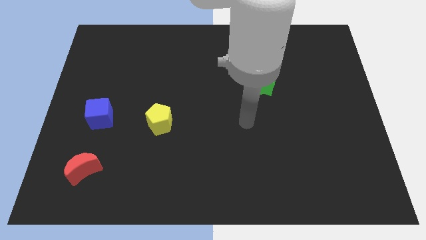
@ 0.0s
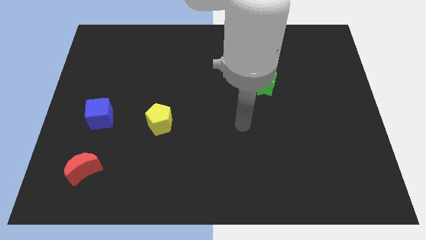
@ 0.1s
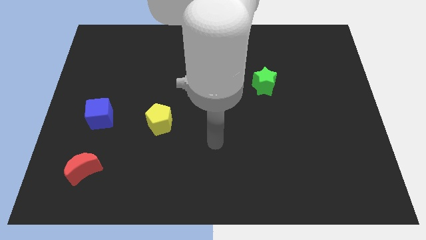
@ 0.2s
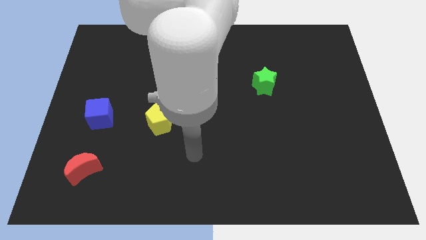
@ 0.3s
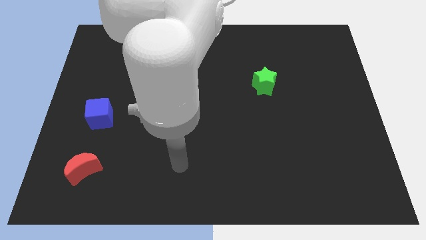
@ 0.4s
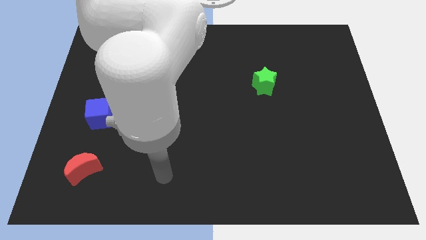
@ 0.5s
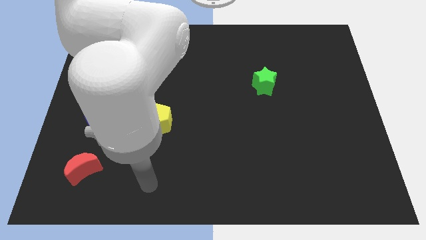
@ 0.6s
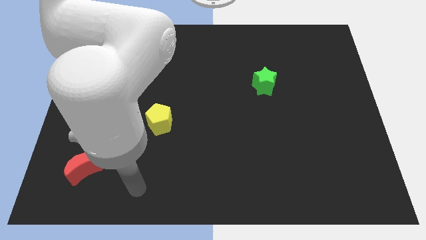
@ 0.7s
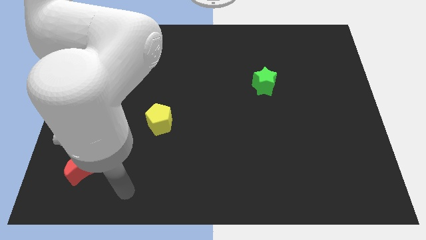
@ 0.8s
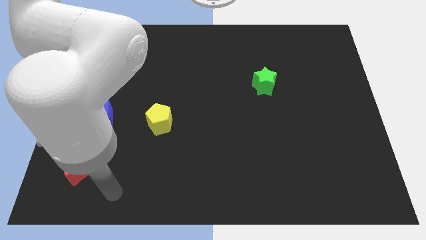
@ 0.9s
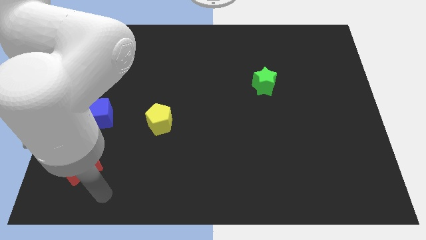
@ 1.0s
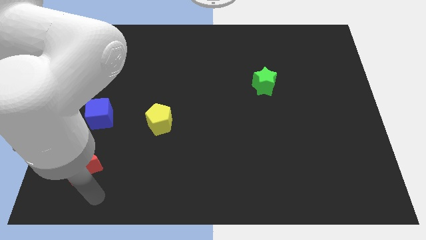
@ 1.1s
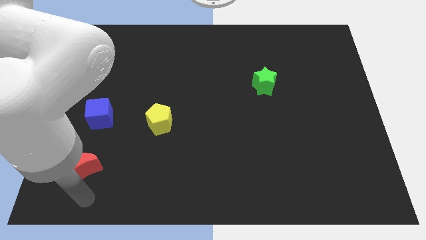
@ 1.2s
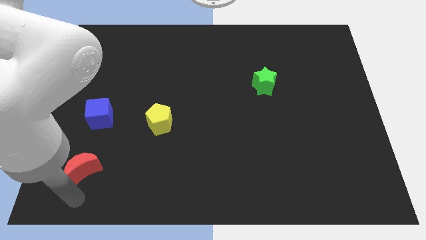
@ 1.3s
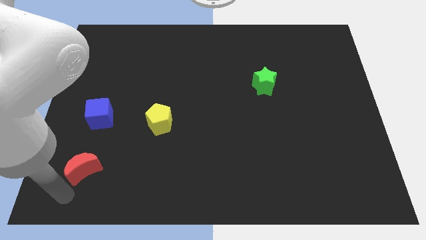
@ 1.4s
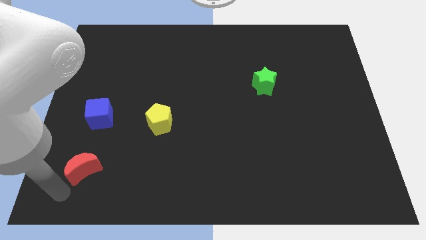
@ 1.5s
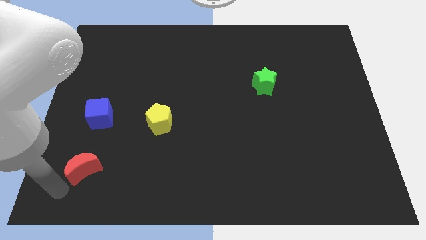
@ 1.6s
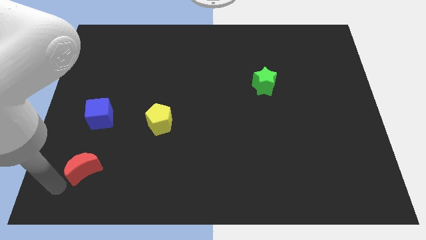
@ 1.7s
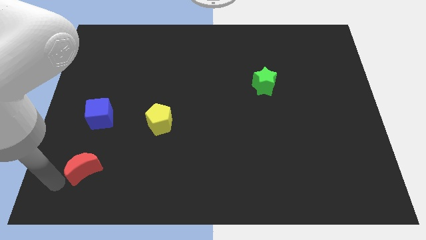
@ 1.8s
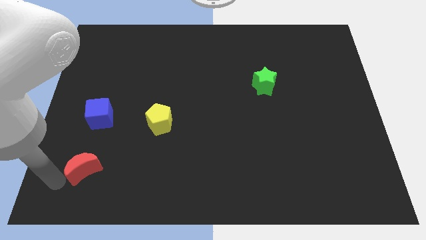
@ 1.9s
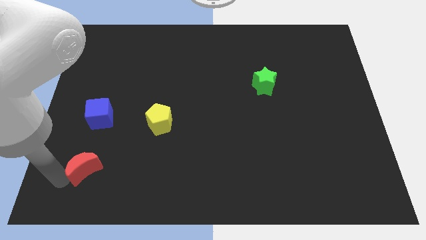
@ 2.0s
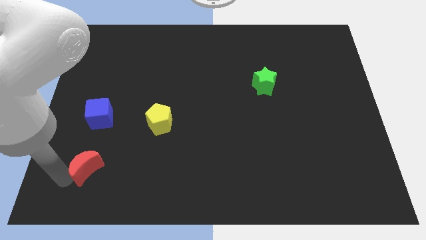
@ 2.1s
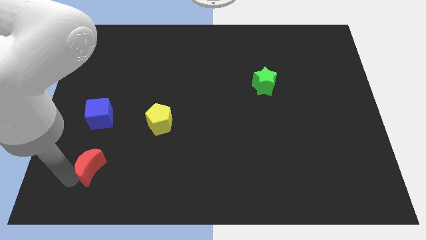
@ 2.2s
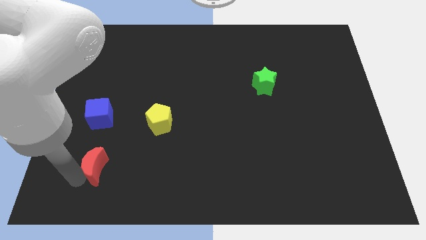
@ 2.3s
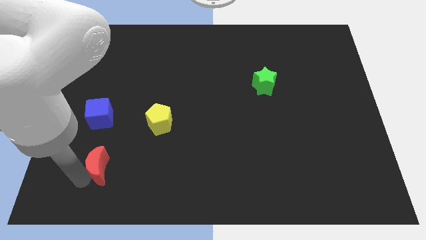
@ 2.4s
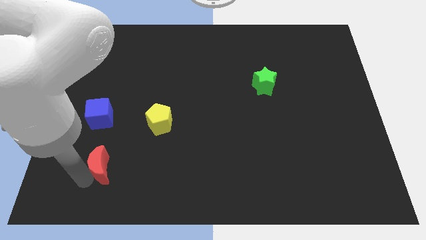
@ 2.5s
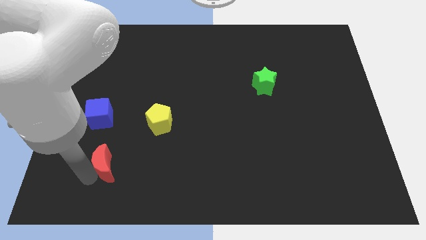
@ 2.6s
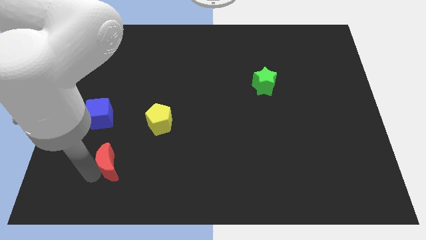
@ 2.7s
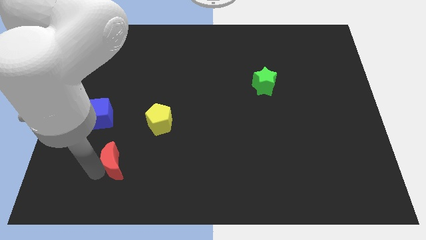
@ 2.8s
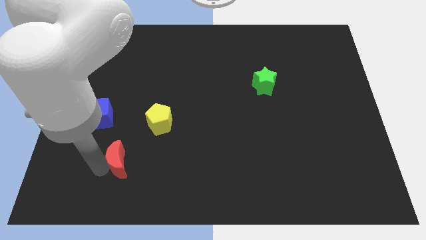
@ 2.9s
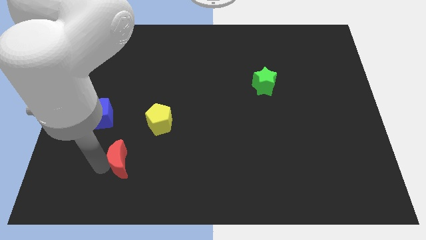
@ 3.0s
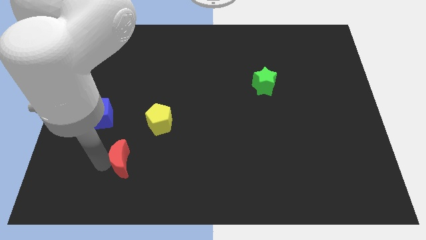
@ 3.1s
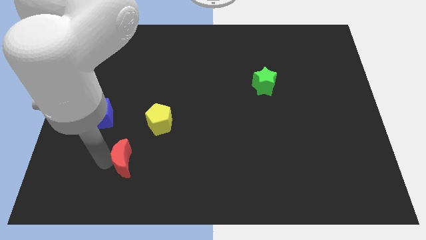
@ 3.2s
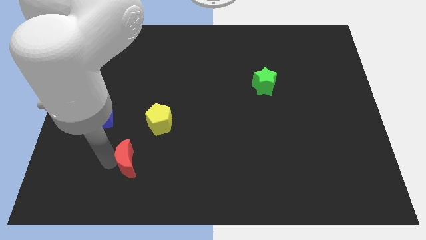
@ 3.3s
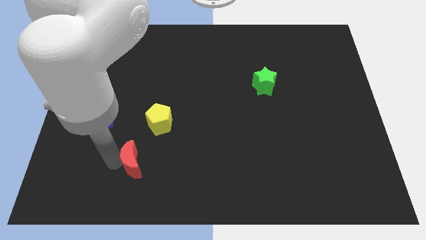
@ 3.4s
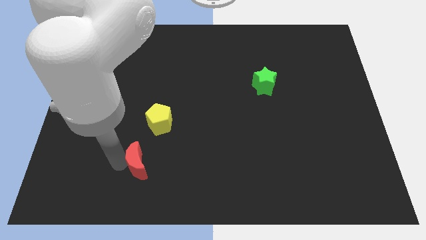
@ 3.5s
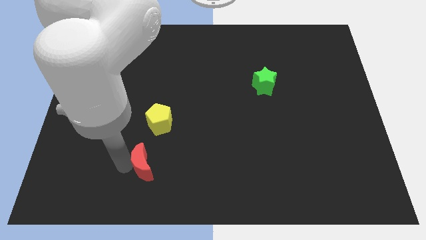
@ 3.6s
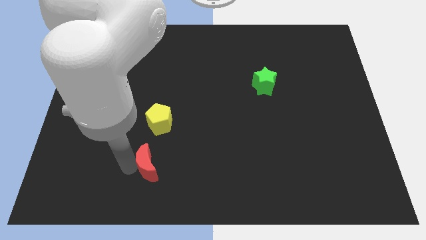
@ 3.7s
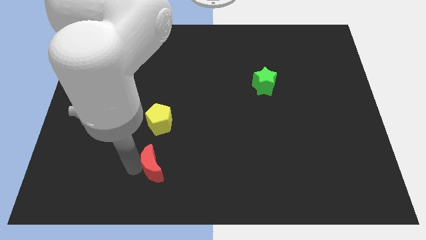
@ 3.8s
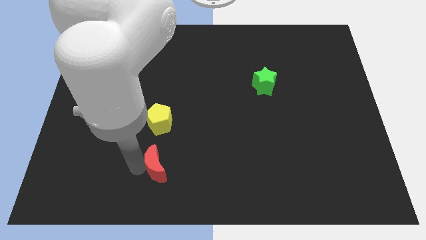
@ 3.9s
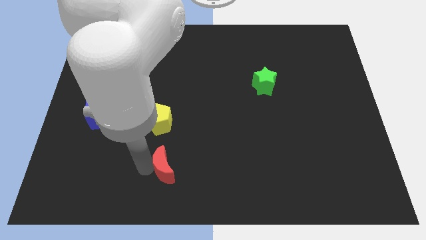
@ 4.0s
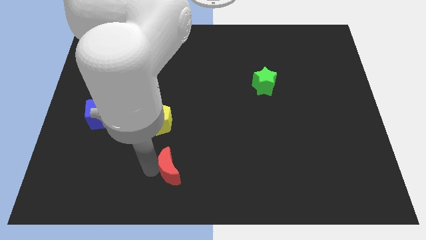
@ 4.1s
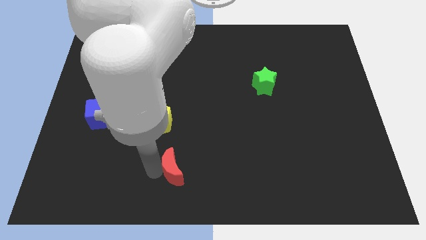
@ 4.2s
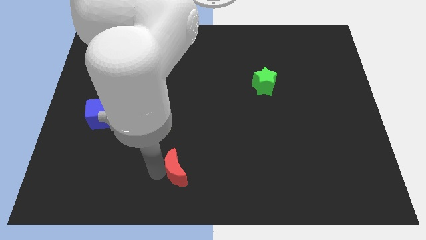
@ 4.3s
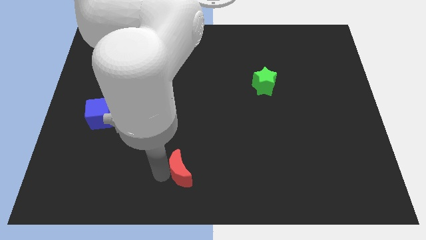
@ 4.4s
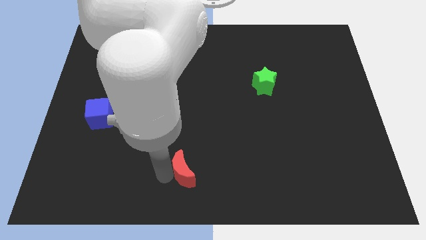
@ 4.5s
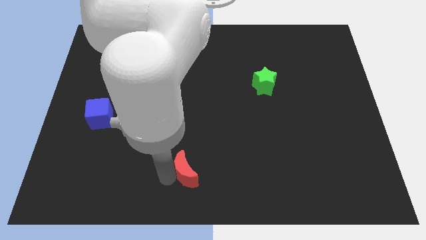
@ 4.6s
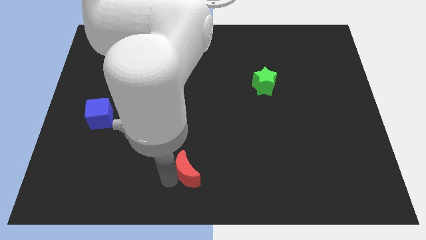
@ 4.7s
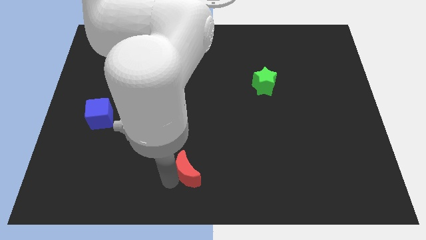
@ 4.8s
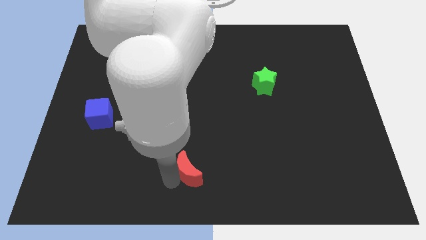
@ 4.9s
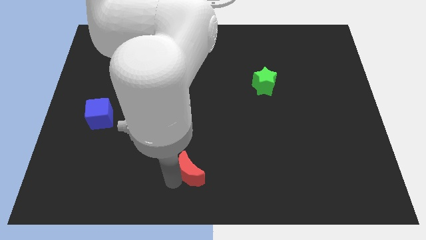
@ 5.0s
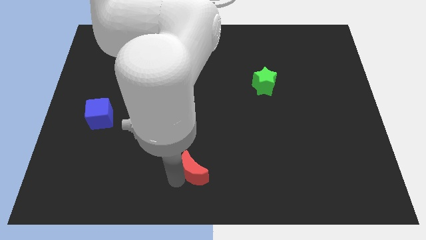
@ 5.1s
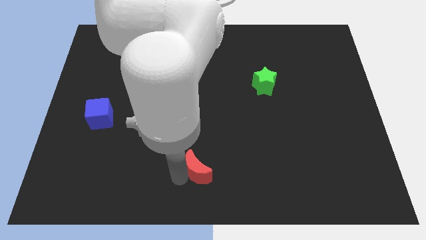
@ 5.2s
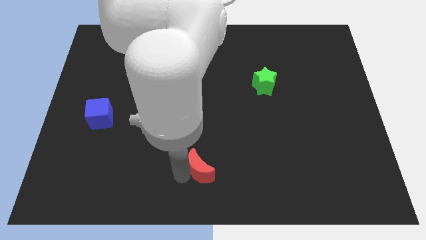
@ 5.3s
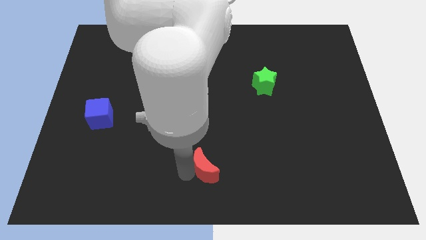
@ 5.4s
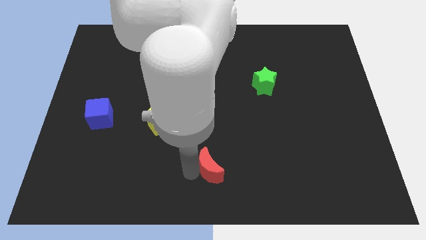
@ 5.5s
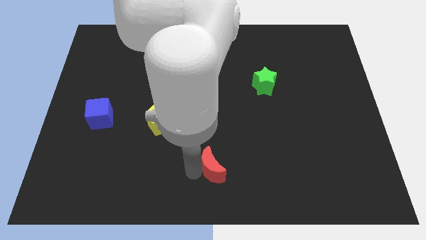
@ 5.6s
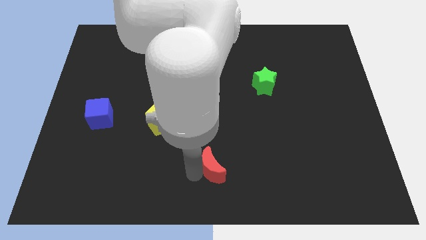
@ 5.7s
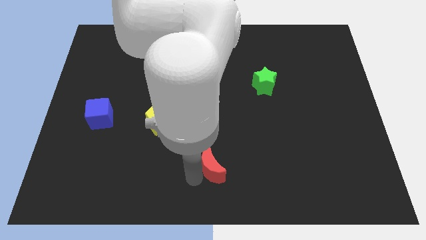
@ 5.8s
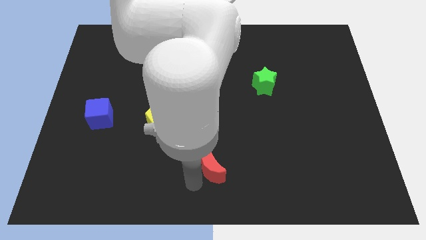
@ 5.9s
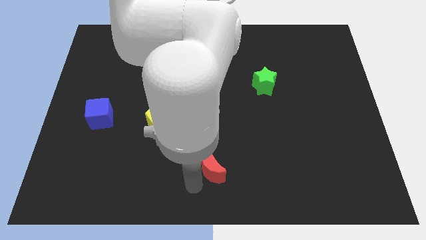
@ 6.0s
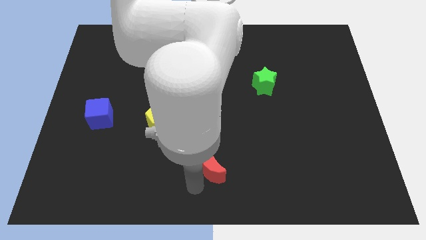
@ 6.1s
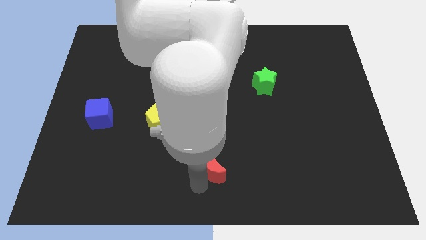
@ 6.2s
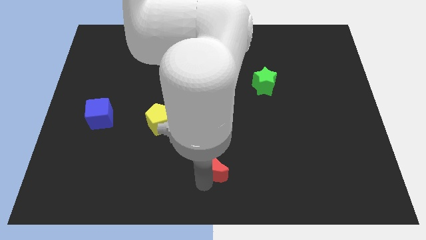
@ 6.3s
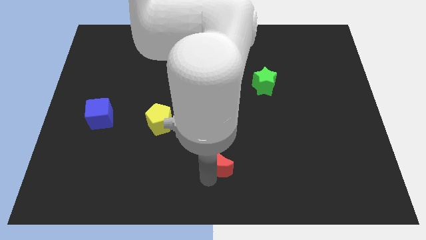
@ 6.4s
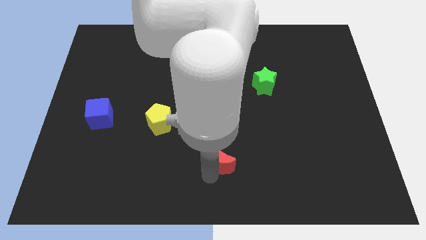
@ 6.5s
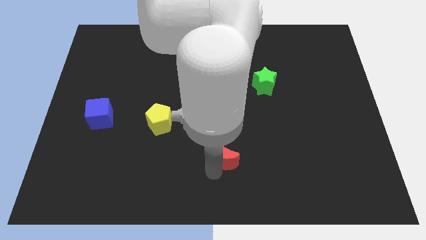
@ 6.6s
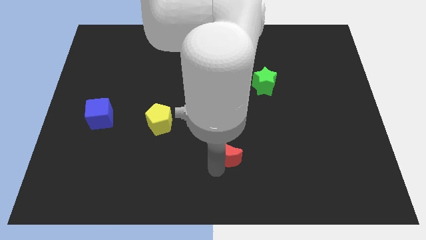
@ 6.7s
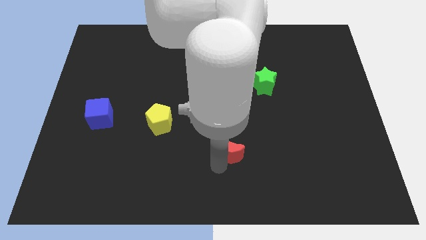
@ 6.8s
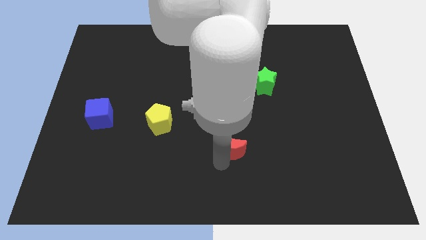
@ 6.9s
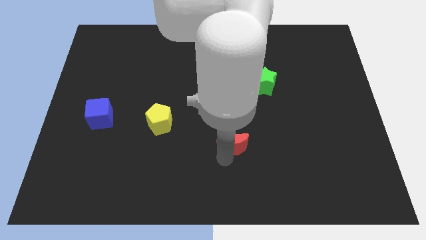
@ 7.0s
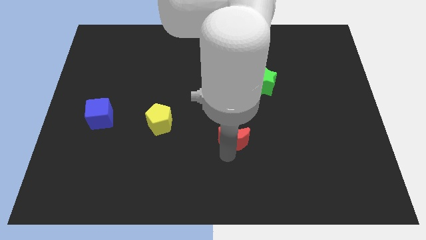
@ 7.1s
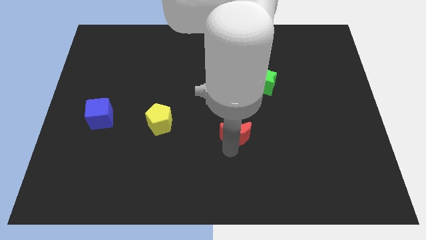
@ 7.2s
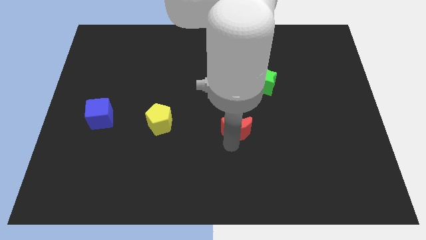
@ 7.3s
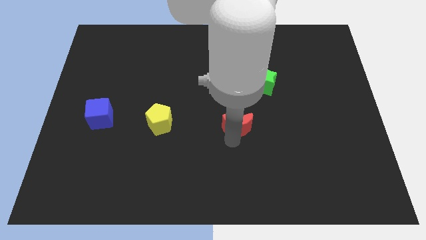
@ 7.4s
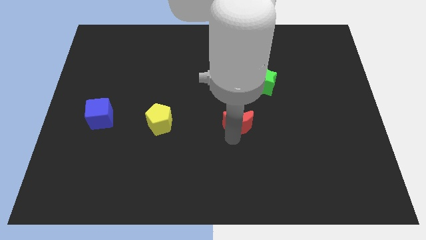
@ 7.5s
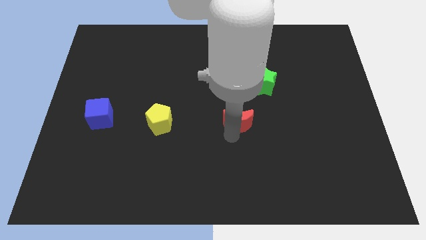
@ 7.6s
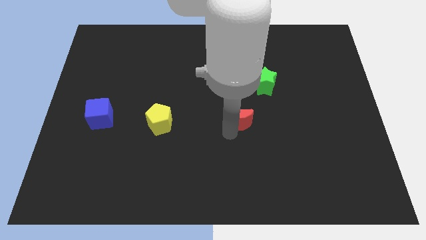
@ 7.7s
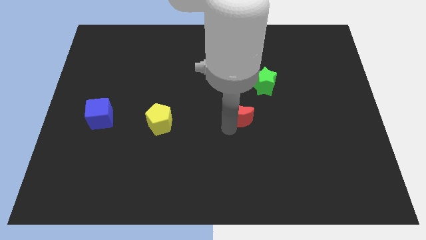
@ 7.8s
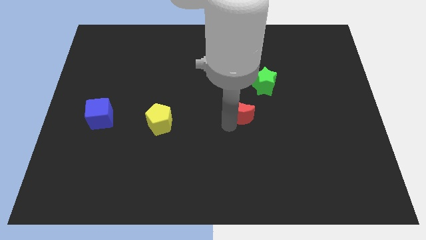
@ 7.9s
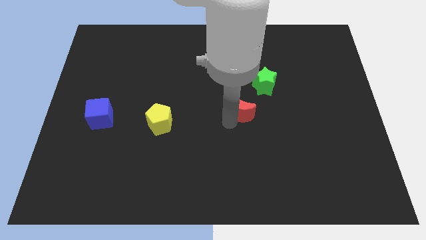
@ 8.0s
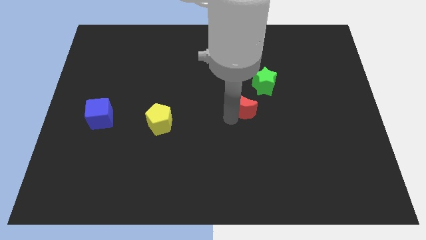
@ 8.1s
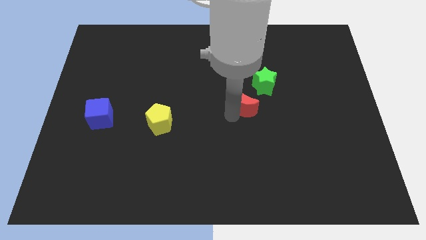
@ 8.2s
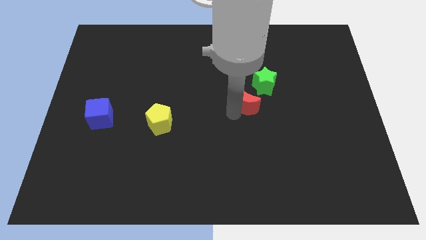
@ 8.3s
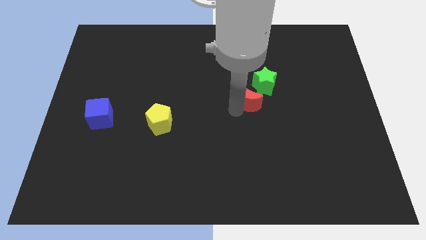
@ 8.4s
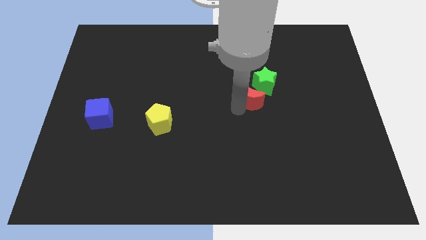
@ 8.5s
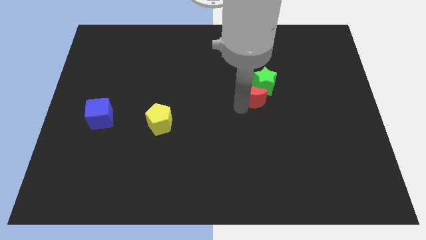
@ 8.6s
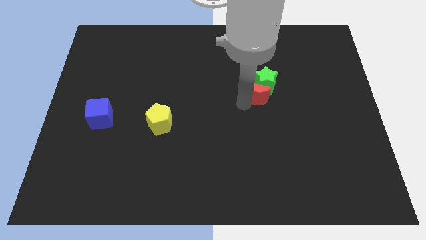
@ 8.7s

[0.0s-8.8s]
put the moon next to the green star

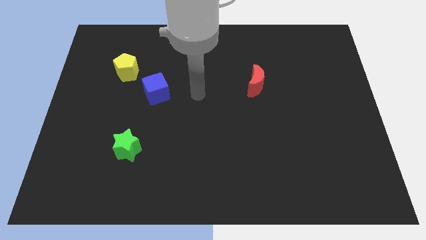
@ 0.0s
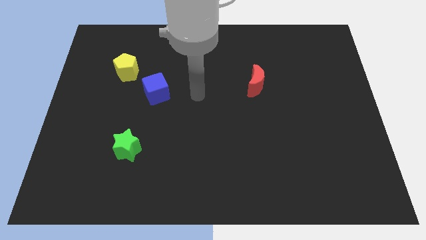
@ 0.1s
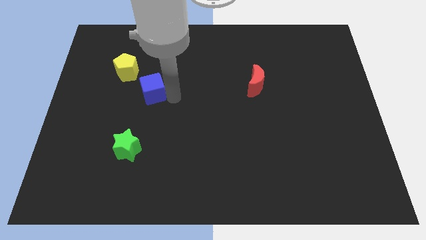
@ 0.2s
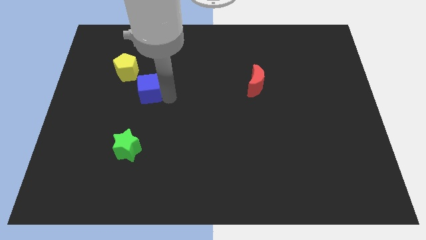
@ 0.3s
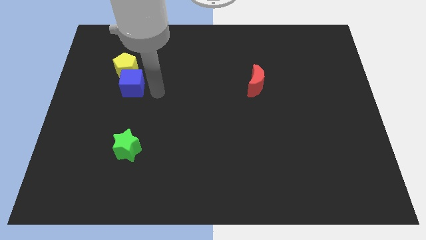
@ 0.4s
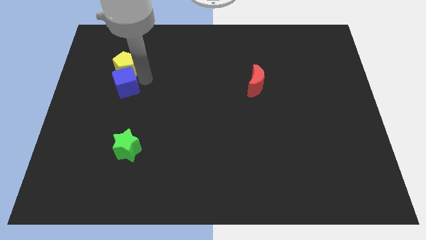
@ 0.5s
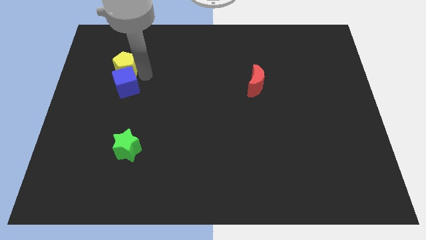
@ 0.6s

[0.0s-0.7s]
move the blue cube to the yellow block
